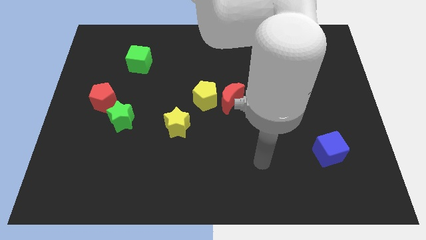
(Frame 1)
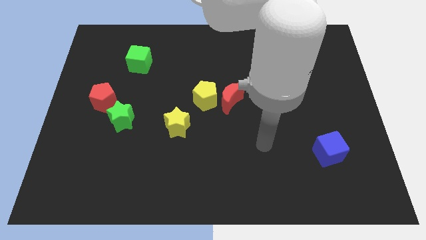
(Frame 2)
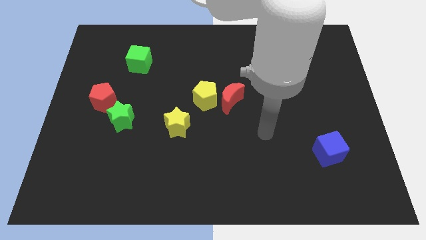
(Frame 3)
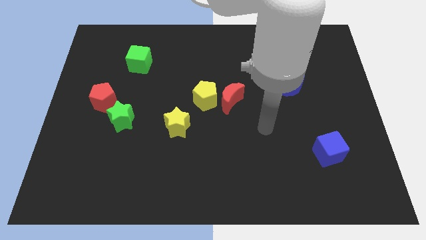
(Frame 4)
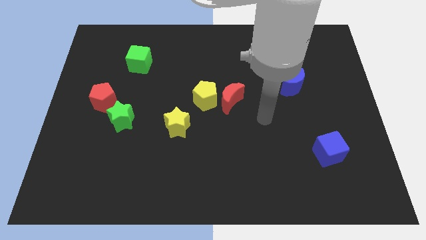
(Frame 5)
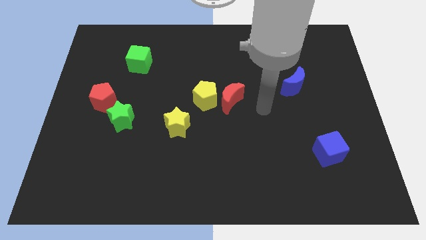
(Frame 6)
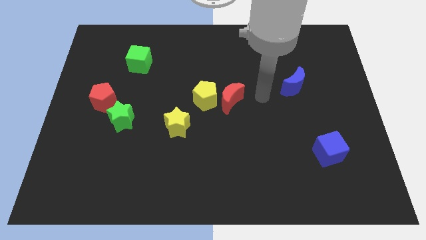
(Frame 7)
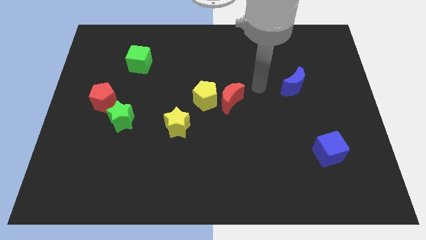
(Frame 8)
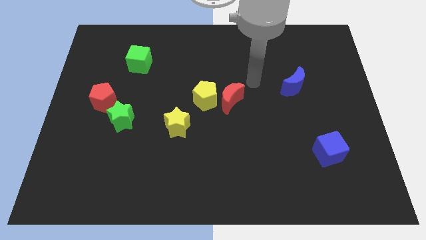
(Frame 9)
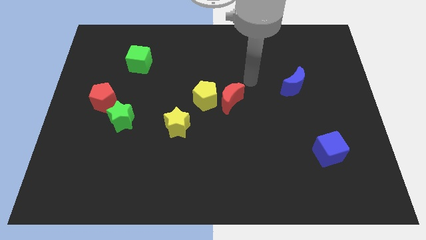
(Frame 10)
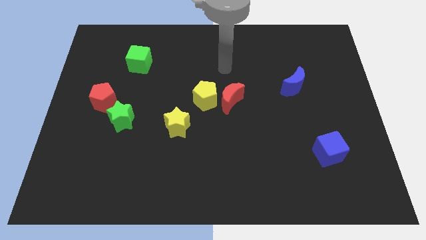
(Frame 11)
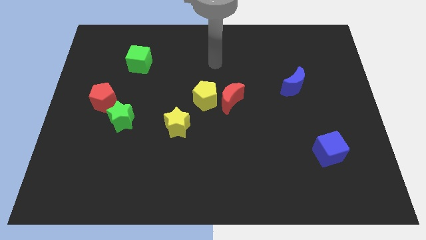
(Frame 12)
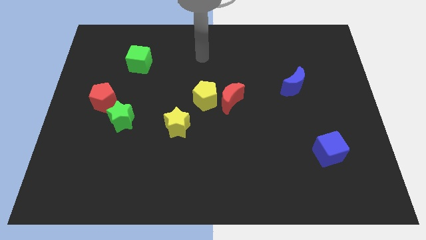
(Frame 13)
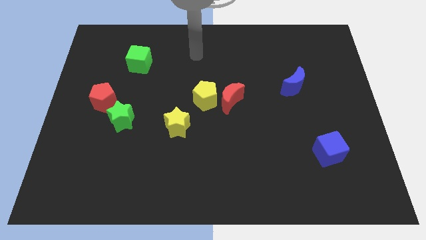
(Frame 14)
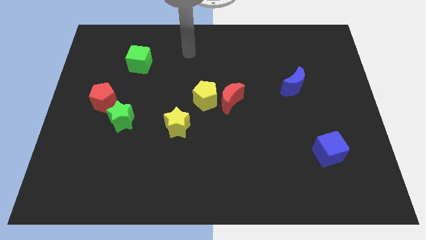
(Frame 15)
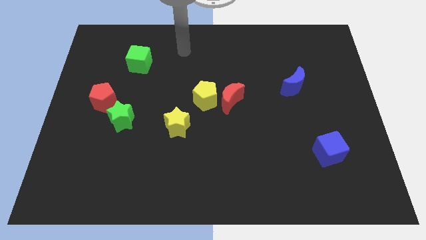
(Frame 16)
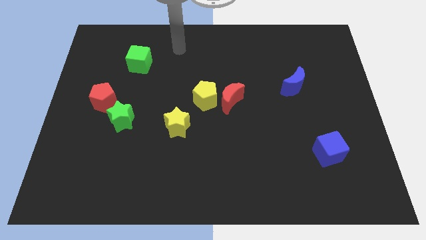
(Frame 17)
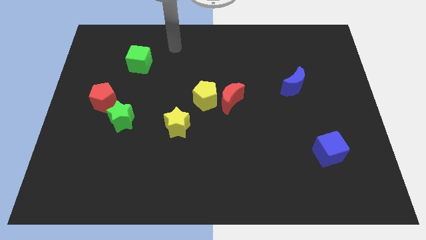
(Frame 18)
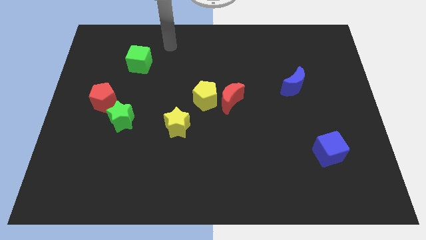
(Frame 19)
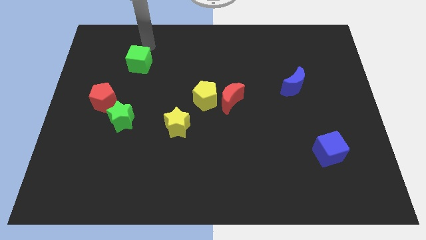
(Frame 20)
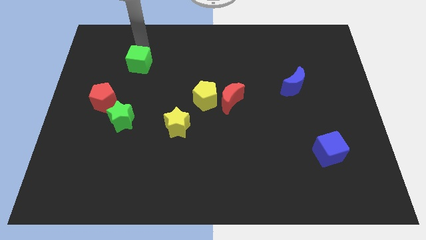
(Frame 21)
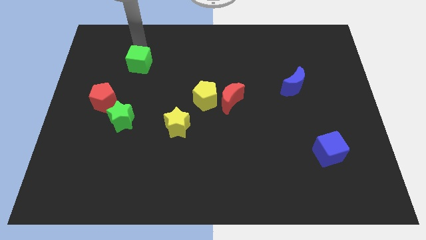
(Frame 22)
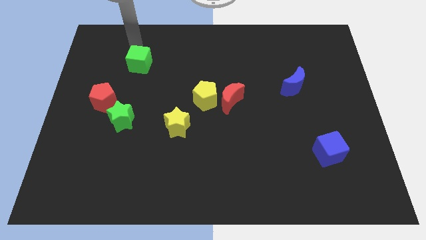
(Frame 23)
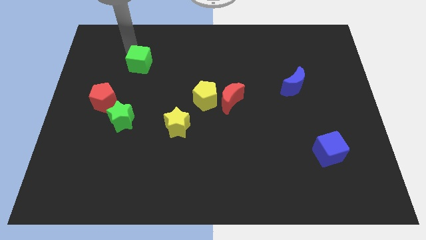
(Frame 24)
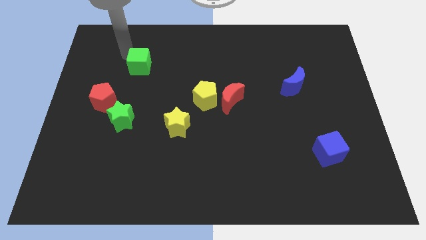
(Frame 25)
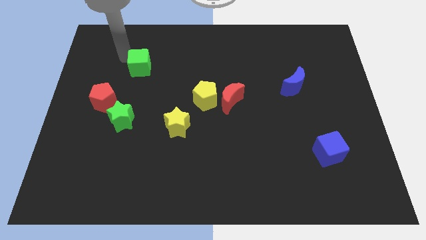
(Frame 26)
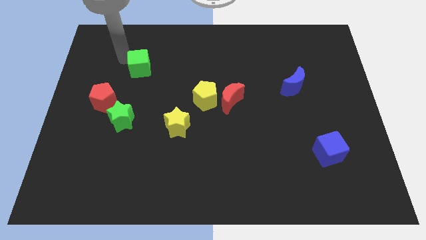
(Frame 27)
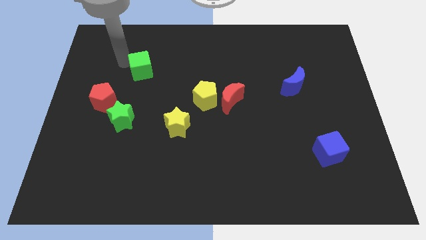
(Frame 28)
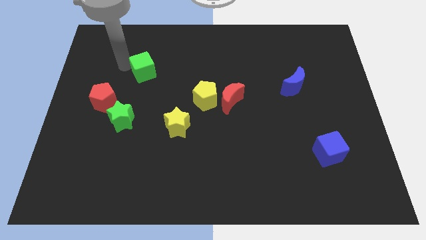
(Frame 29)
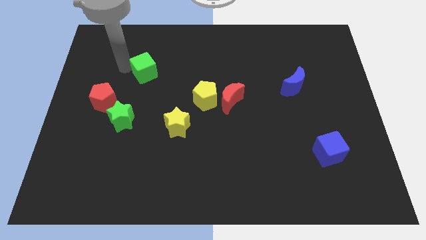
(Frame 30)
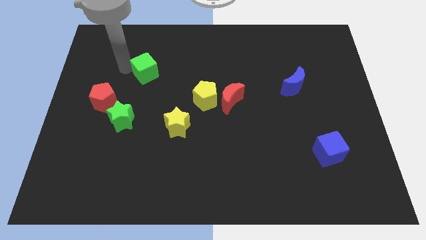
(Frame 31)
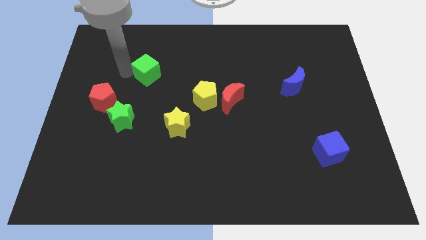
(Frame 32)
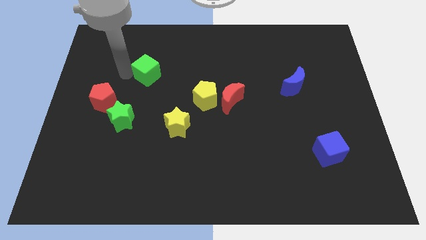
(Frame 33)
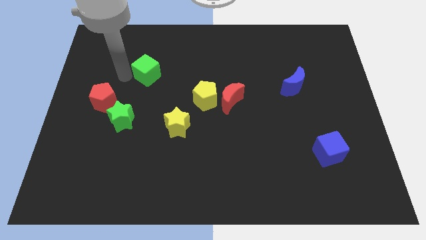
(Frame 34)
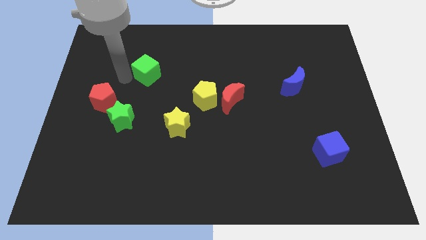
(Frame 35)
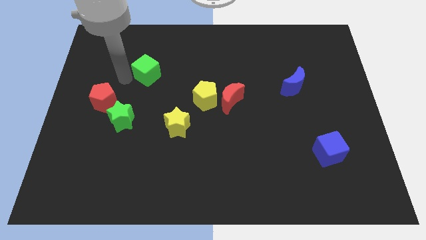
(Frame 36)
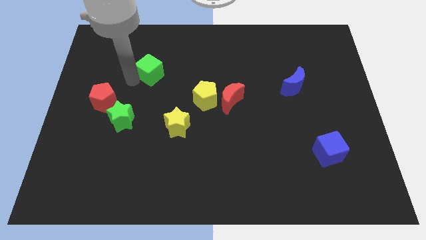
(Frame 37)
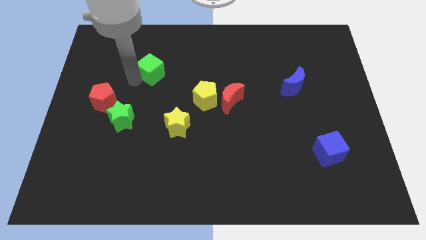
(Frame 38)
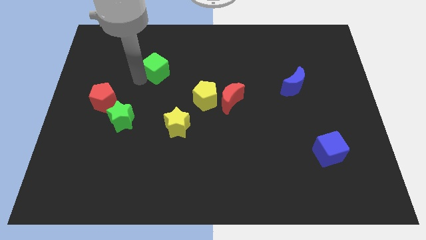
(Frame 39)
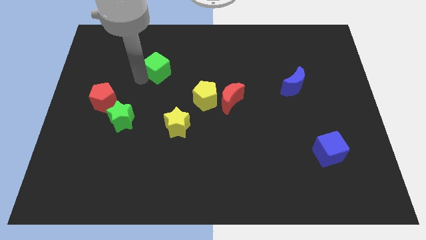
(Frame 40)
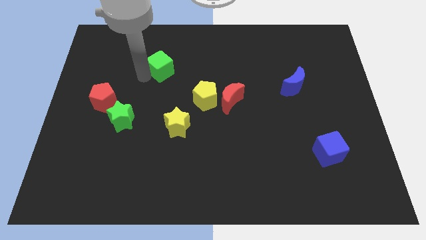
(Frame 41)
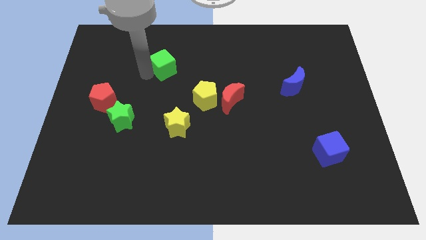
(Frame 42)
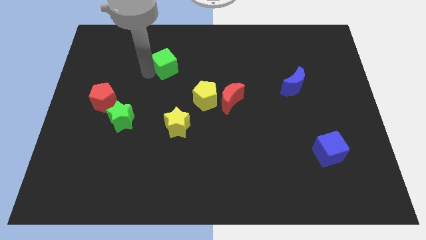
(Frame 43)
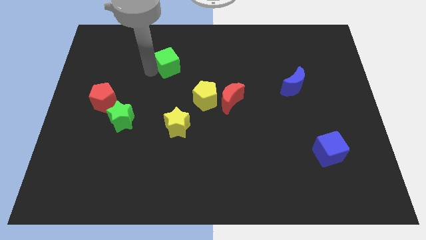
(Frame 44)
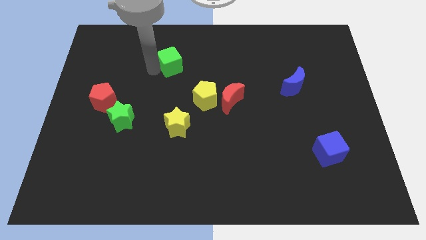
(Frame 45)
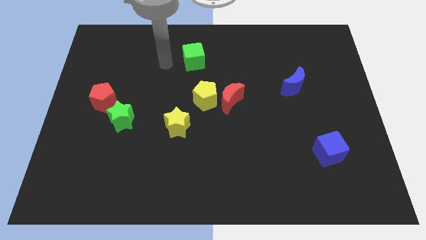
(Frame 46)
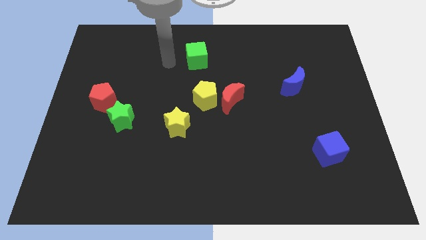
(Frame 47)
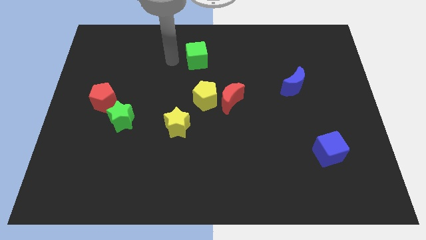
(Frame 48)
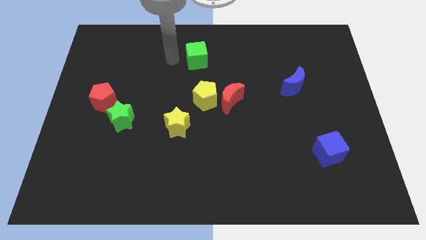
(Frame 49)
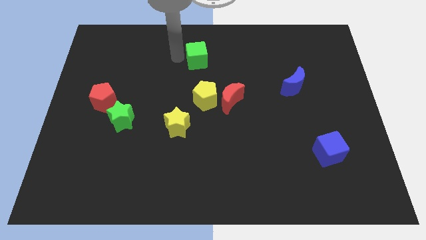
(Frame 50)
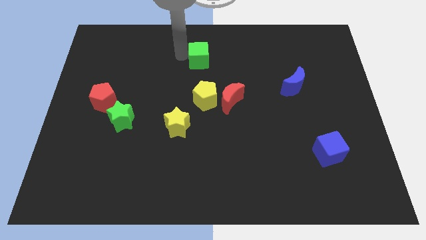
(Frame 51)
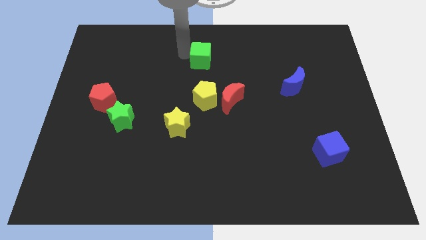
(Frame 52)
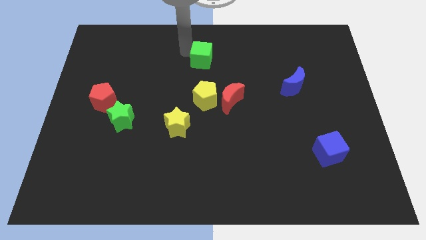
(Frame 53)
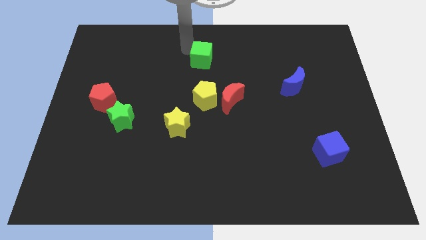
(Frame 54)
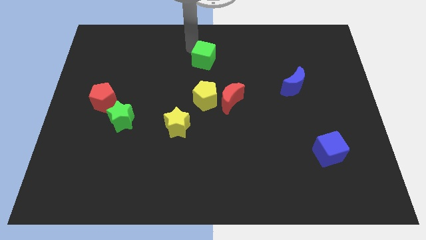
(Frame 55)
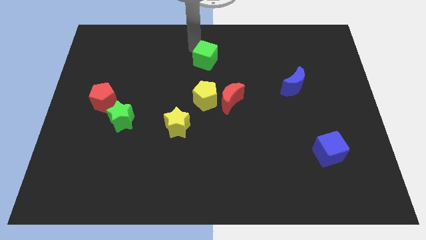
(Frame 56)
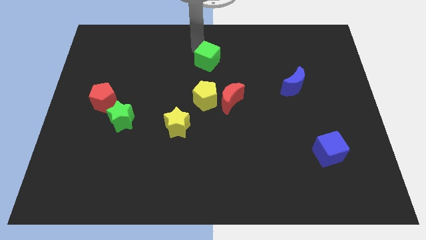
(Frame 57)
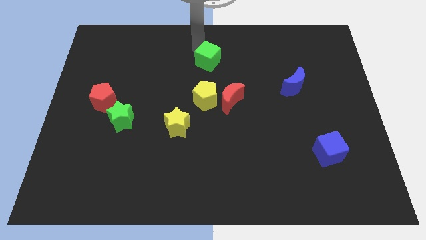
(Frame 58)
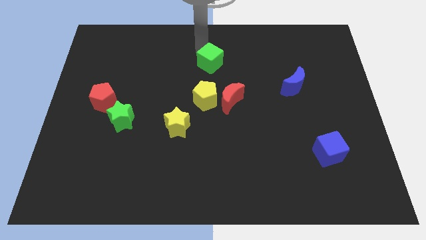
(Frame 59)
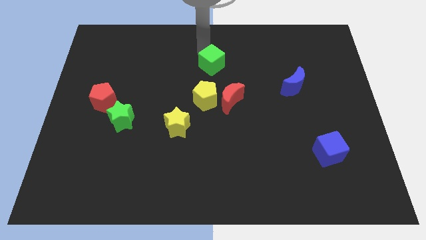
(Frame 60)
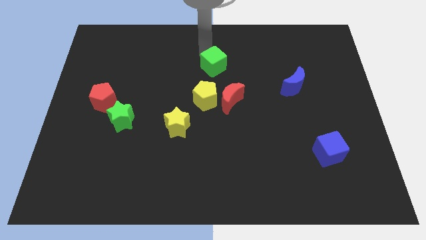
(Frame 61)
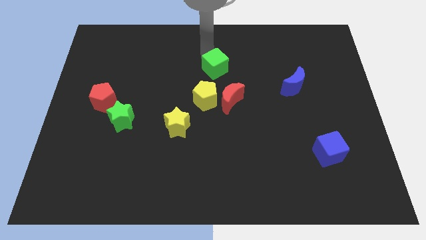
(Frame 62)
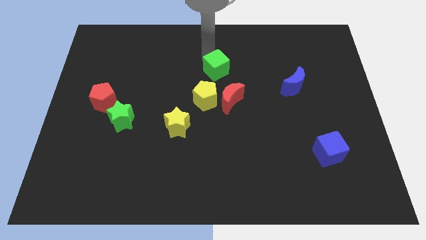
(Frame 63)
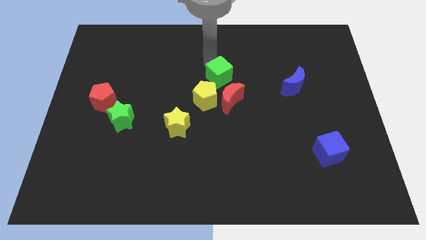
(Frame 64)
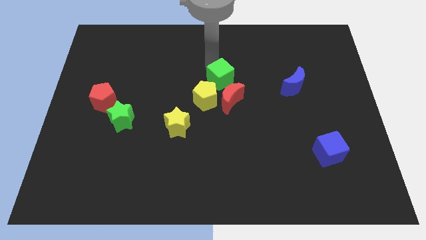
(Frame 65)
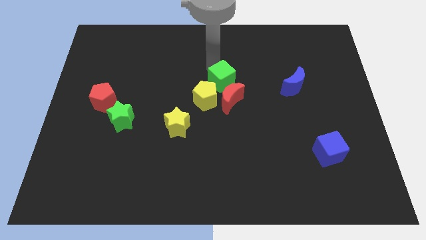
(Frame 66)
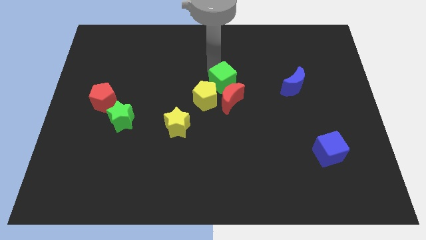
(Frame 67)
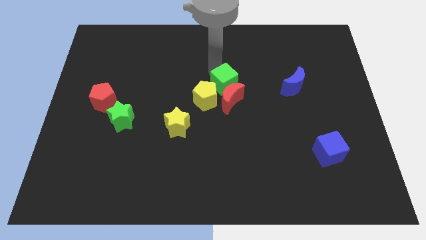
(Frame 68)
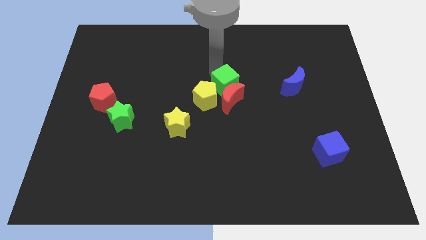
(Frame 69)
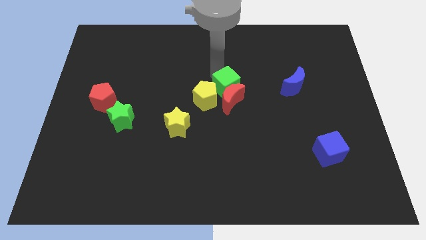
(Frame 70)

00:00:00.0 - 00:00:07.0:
put the green cube next to the red moon

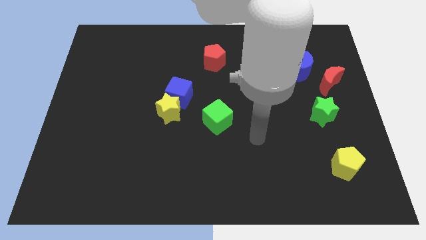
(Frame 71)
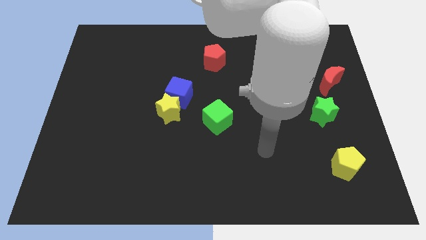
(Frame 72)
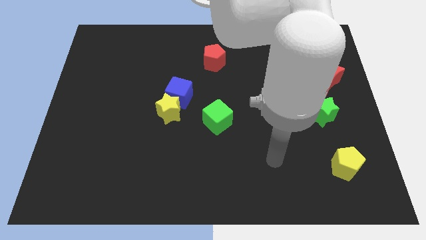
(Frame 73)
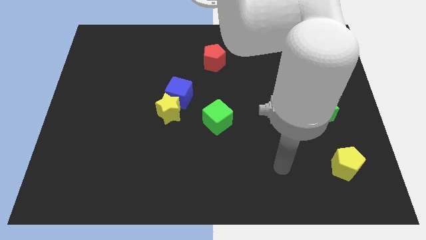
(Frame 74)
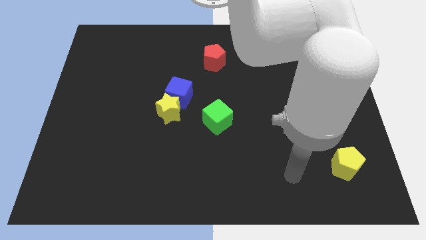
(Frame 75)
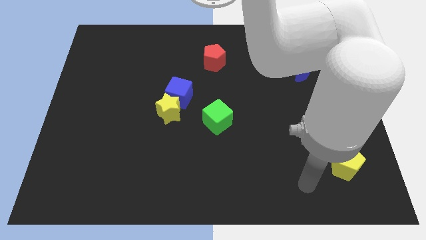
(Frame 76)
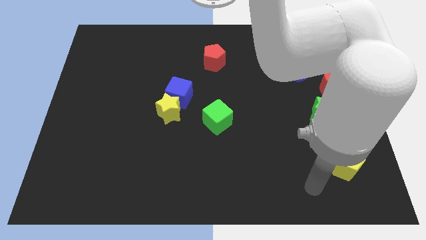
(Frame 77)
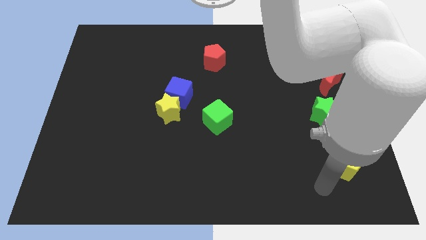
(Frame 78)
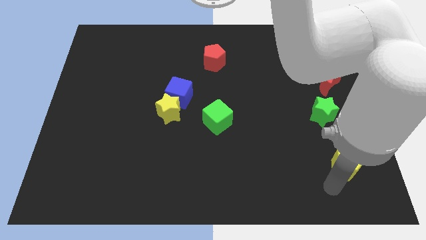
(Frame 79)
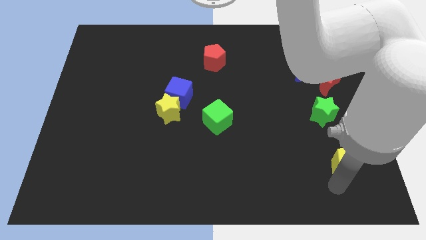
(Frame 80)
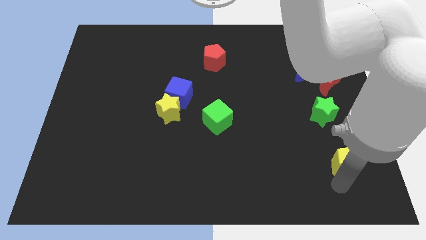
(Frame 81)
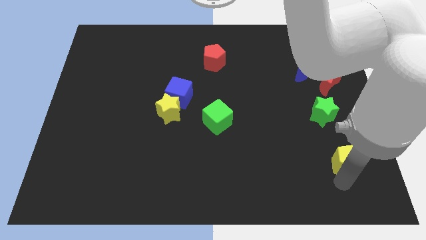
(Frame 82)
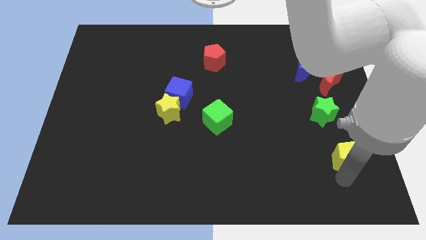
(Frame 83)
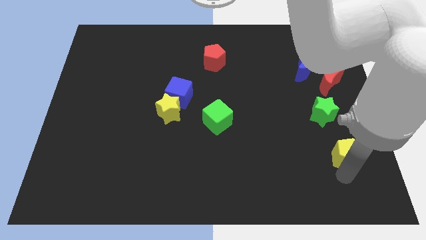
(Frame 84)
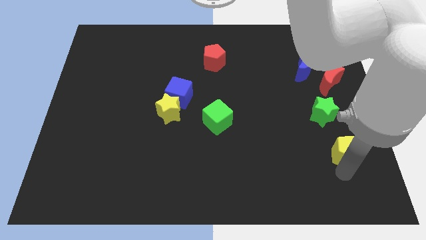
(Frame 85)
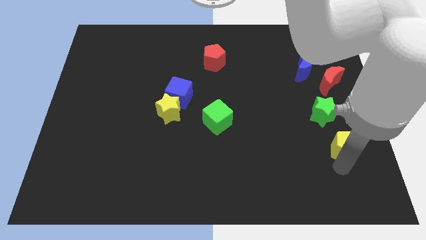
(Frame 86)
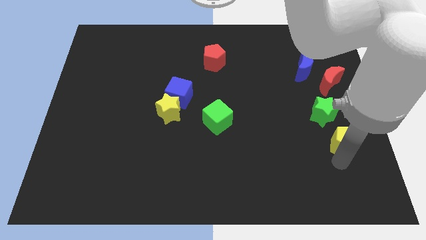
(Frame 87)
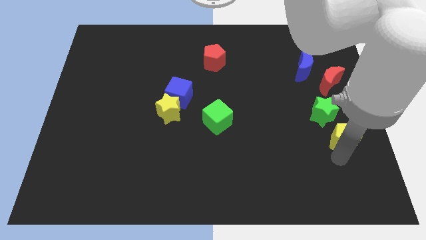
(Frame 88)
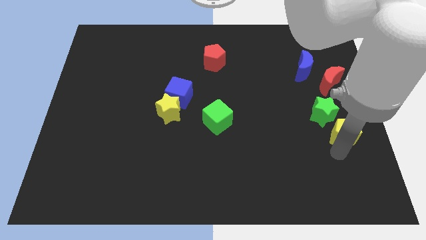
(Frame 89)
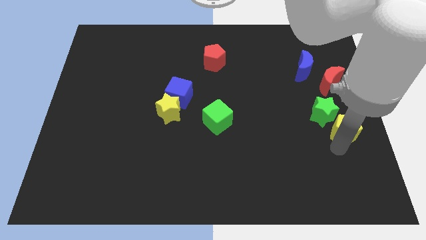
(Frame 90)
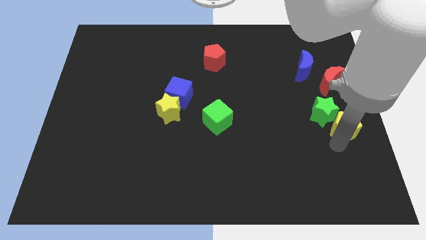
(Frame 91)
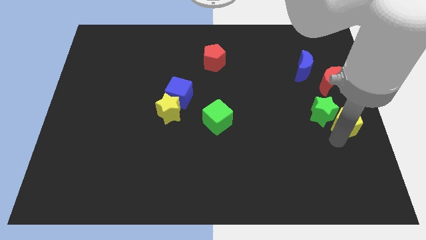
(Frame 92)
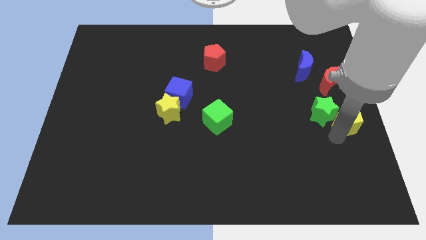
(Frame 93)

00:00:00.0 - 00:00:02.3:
slide the yellow pentagon to the green star
